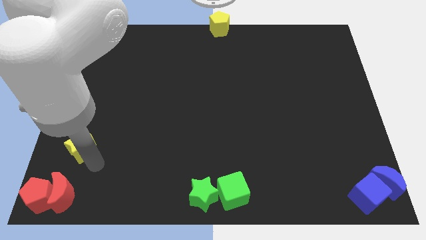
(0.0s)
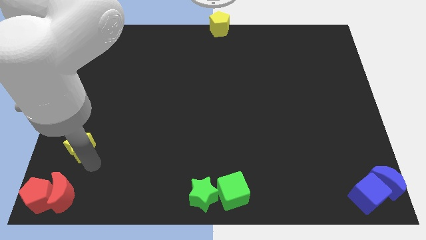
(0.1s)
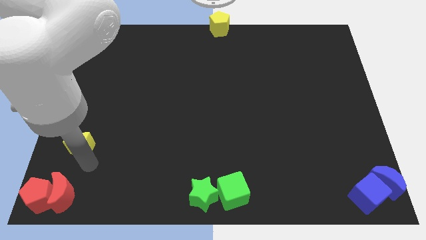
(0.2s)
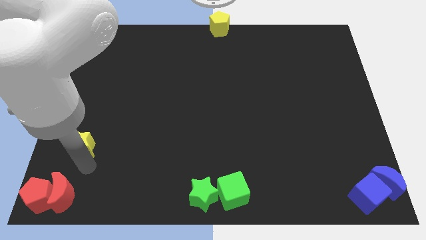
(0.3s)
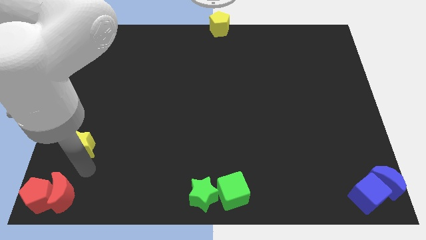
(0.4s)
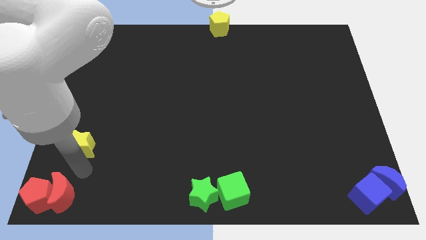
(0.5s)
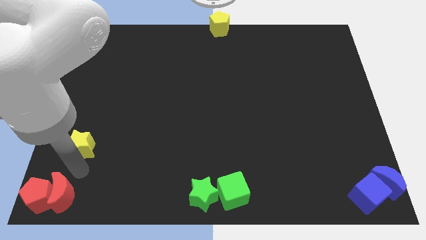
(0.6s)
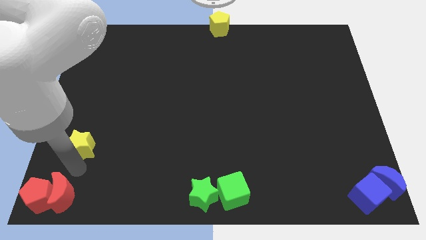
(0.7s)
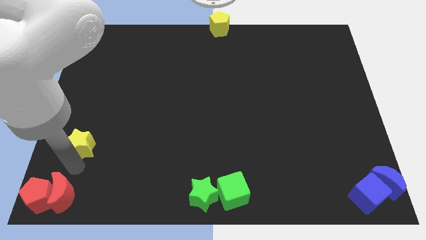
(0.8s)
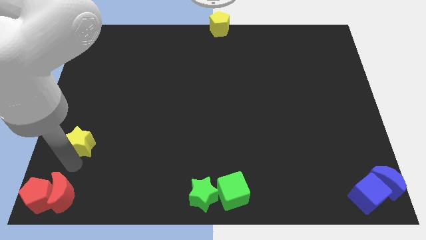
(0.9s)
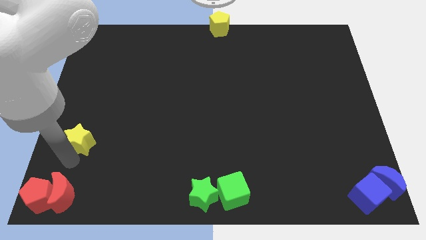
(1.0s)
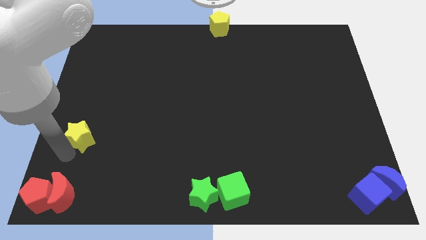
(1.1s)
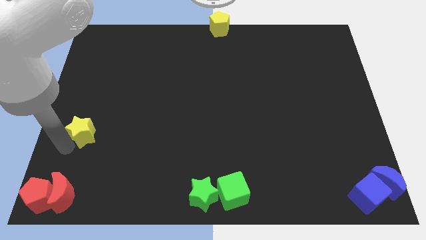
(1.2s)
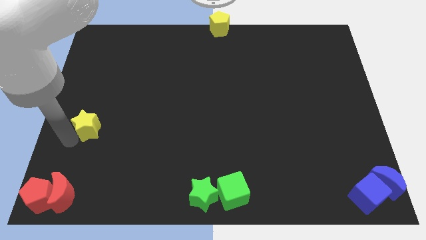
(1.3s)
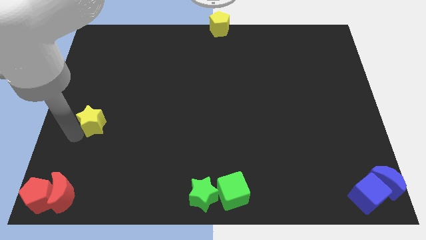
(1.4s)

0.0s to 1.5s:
slightly push the yellow star upwards of the board

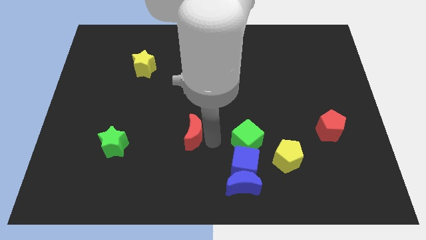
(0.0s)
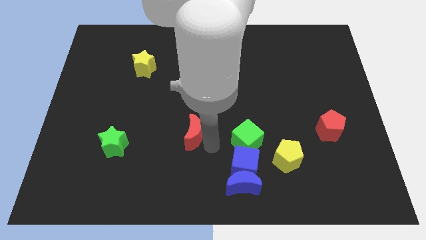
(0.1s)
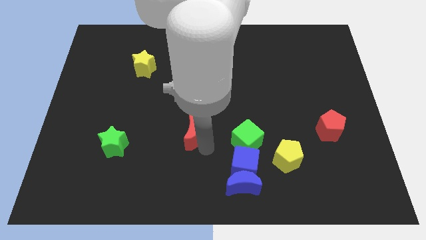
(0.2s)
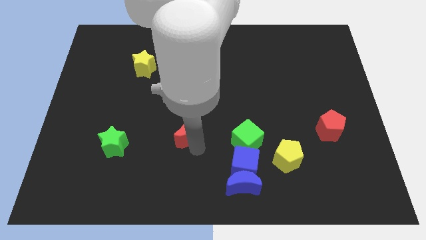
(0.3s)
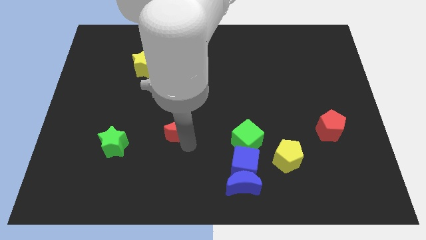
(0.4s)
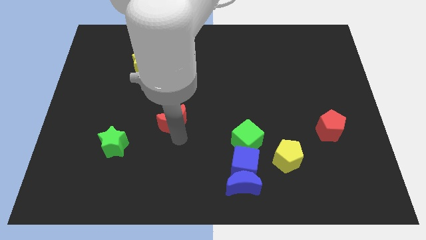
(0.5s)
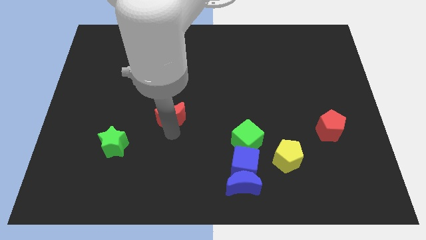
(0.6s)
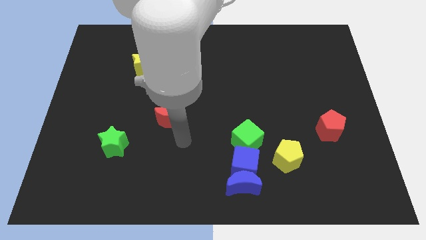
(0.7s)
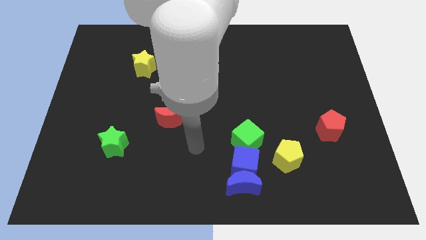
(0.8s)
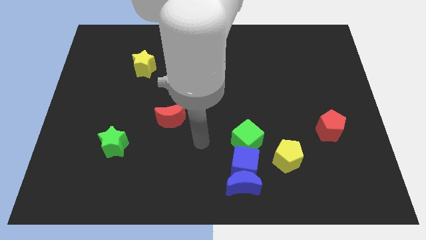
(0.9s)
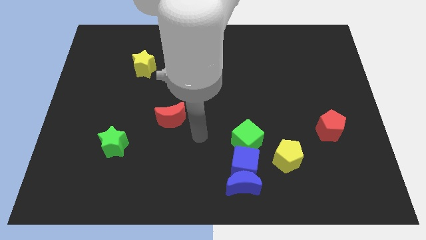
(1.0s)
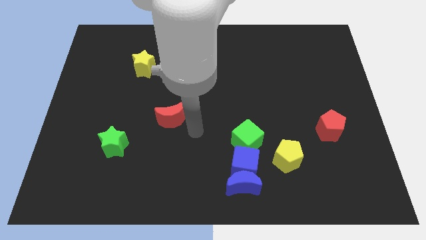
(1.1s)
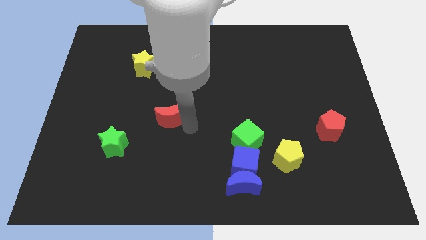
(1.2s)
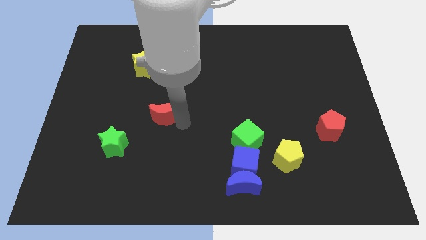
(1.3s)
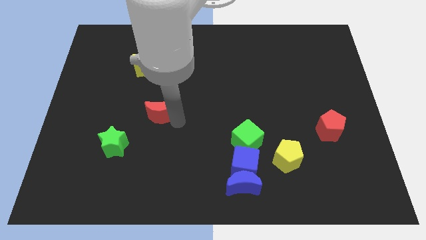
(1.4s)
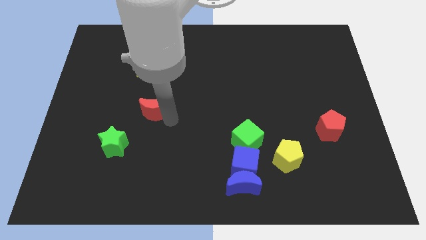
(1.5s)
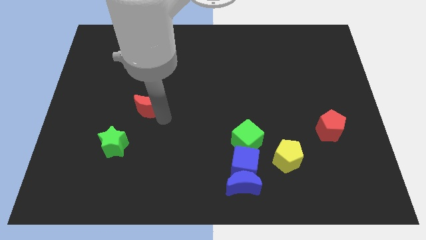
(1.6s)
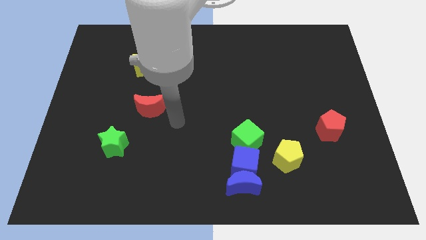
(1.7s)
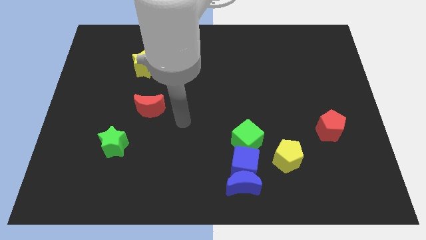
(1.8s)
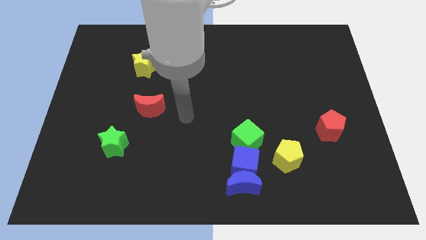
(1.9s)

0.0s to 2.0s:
put the red moon above the green star

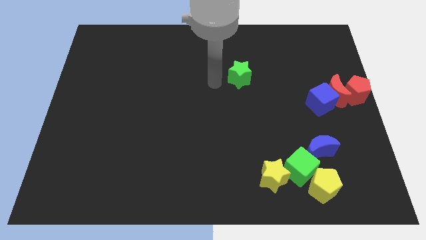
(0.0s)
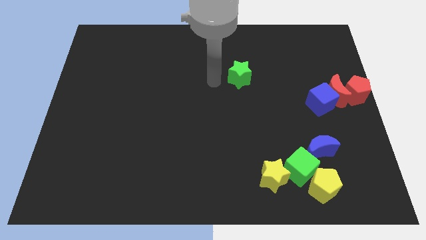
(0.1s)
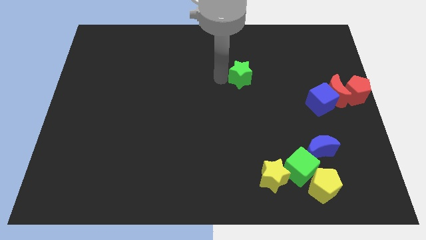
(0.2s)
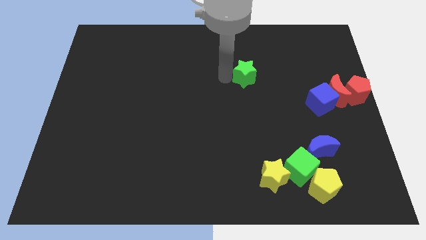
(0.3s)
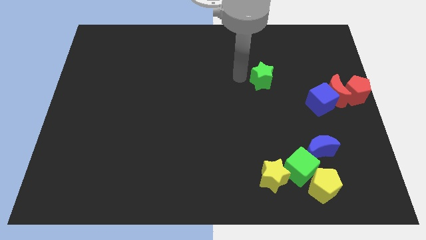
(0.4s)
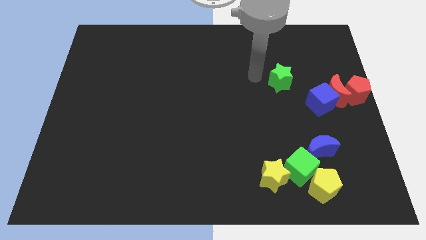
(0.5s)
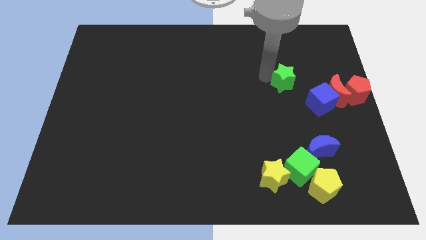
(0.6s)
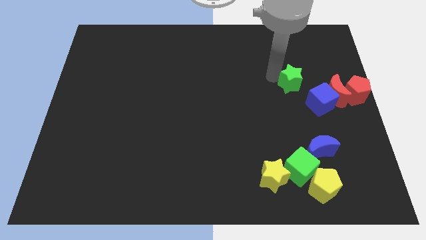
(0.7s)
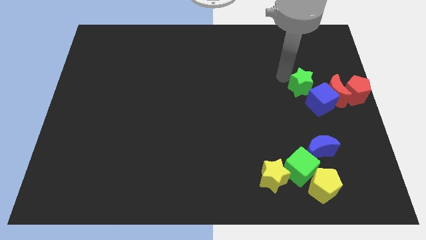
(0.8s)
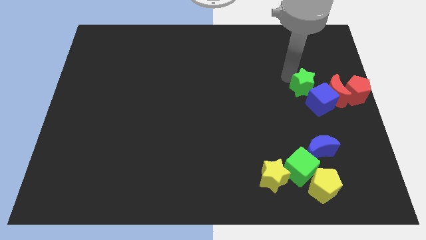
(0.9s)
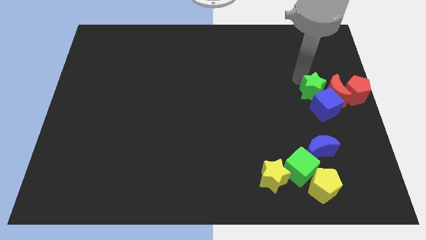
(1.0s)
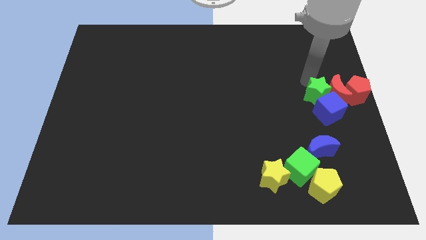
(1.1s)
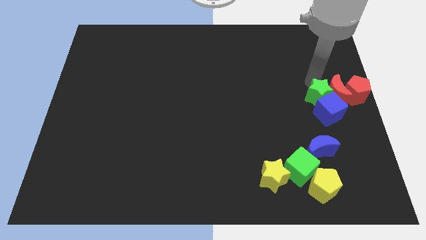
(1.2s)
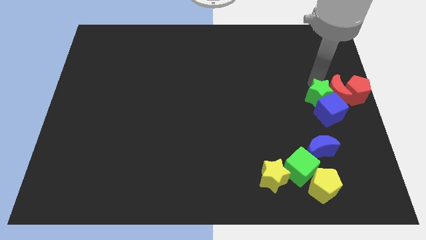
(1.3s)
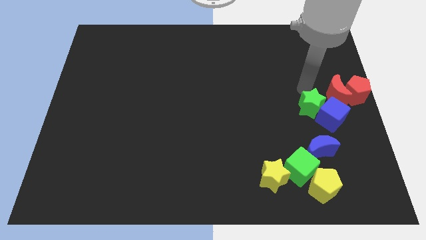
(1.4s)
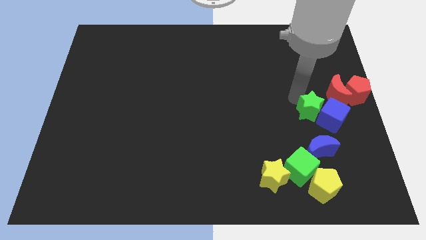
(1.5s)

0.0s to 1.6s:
move the green star into the blue cube

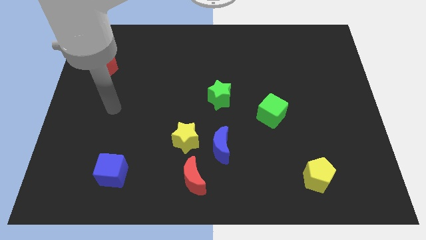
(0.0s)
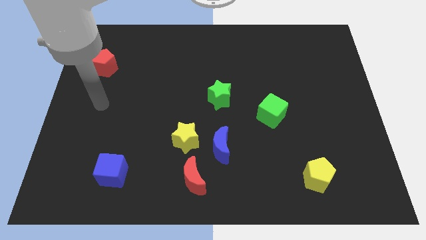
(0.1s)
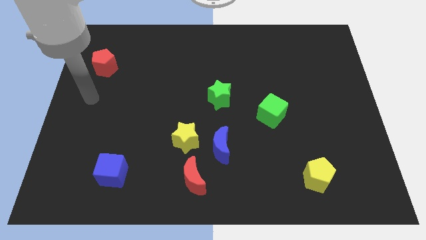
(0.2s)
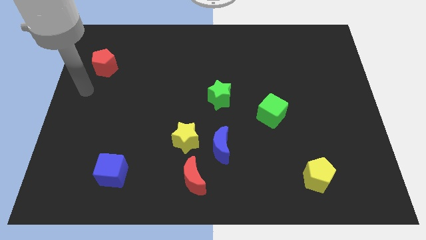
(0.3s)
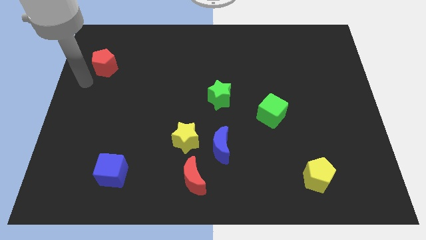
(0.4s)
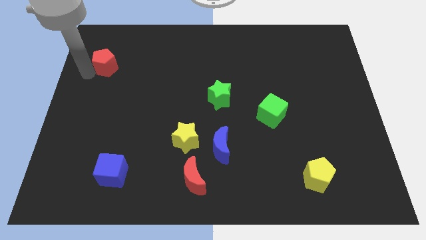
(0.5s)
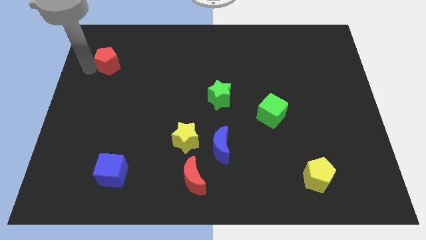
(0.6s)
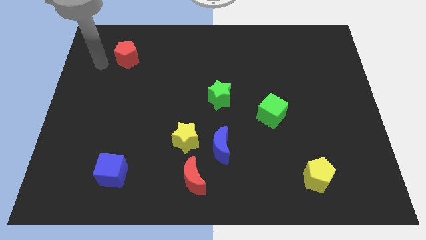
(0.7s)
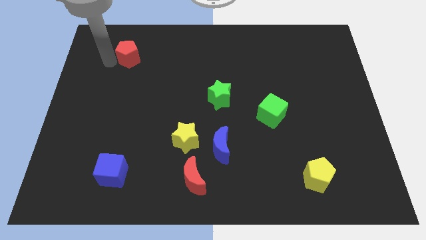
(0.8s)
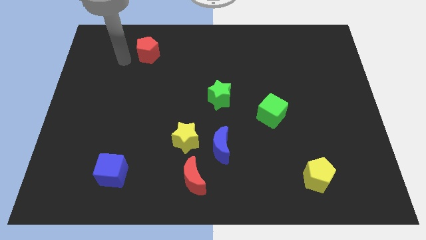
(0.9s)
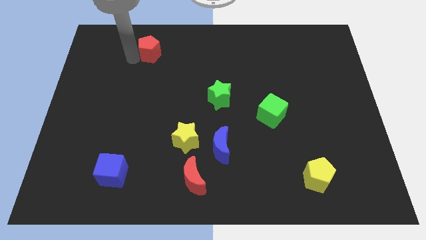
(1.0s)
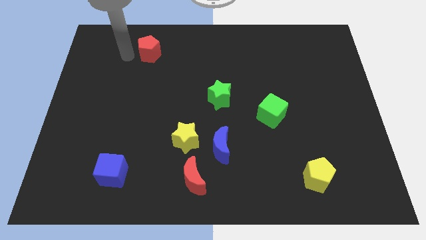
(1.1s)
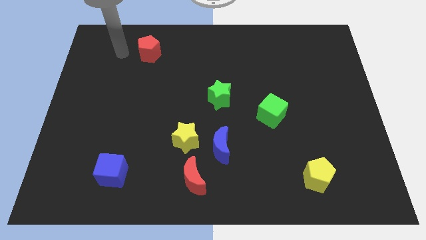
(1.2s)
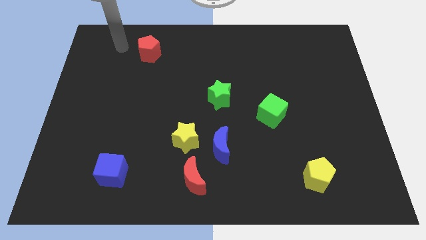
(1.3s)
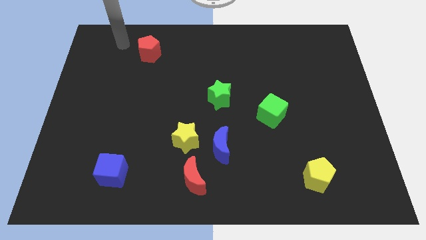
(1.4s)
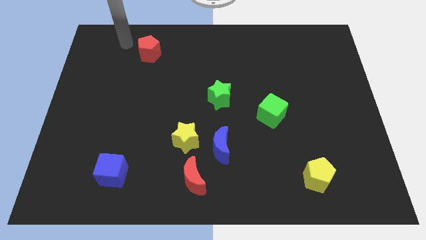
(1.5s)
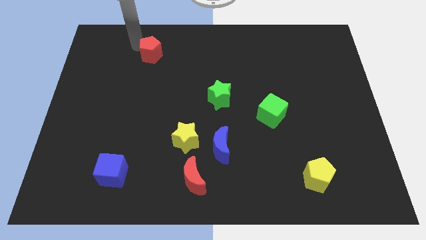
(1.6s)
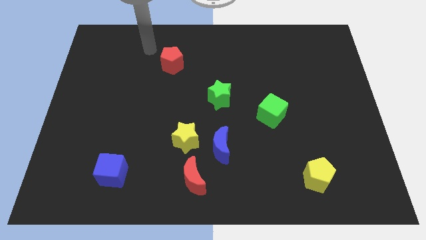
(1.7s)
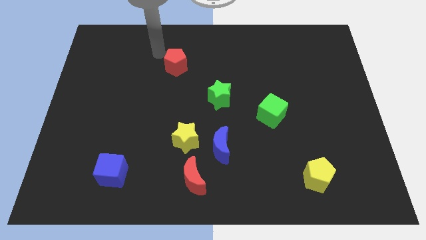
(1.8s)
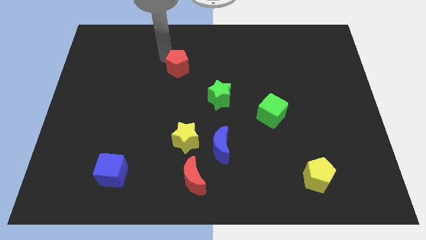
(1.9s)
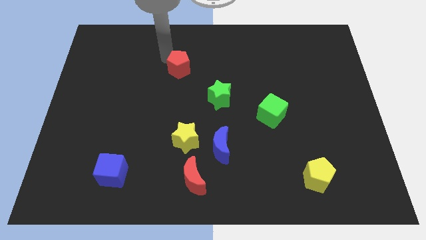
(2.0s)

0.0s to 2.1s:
push the red pentagon towards the top left of the green star

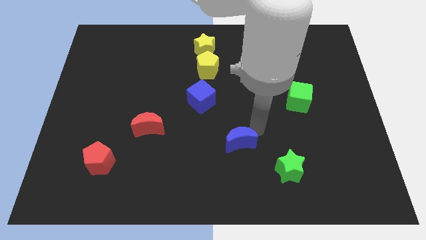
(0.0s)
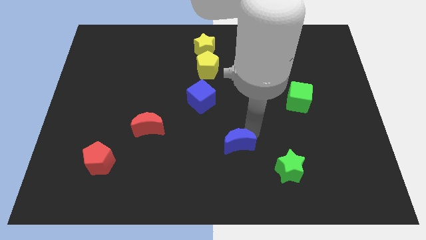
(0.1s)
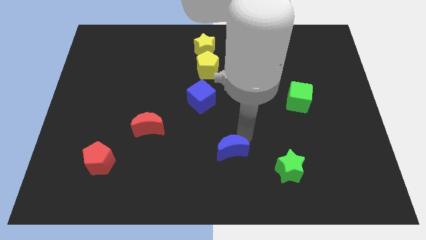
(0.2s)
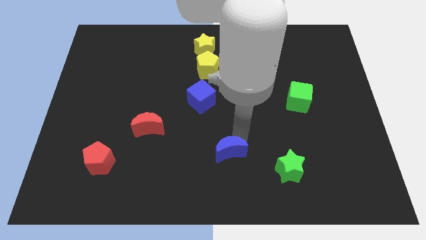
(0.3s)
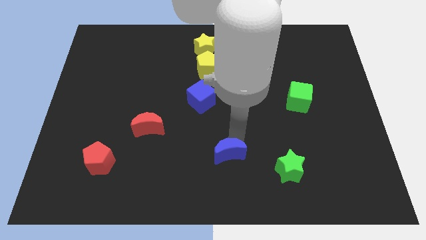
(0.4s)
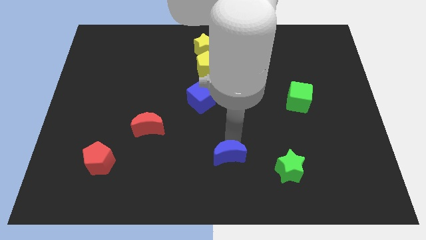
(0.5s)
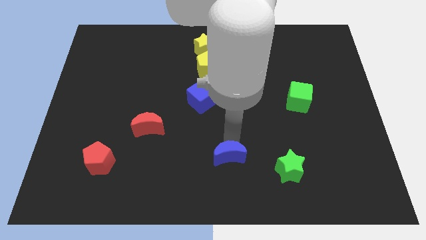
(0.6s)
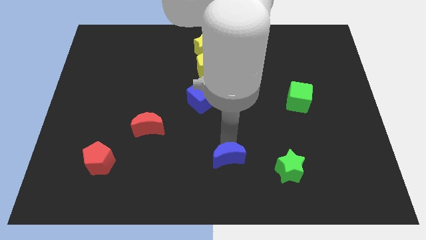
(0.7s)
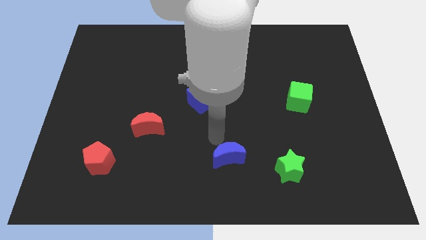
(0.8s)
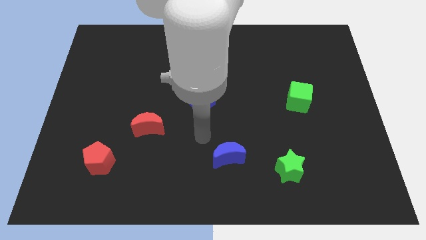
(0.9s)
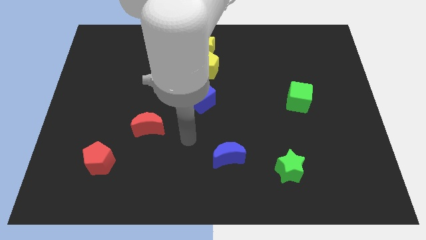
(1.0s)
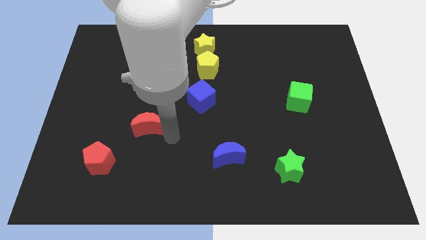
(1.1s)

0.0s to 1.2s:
slightly move the blue crescent left to the green star

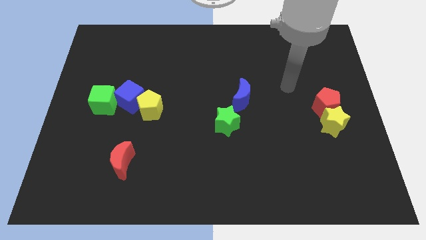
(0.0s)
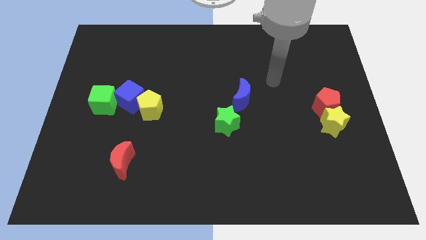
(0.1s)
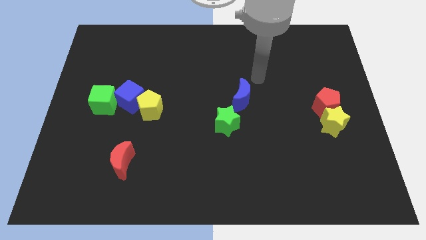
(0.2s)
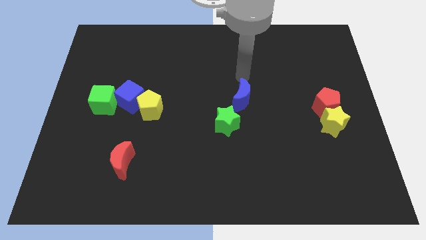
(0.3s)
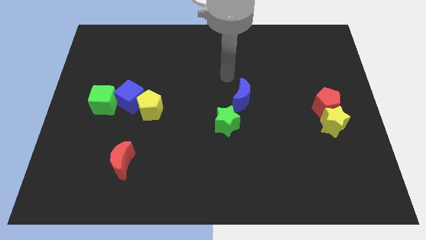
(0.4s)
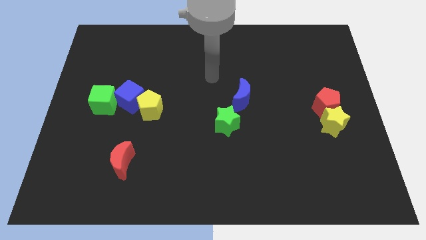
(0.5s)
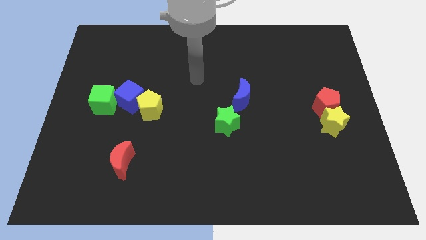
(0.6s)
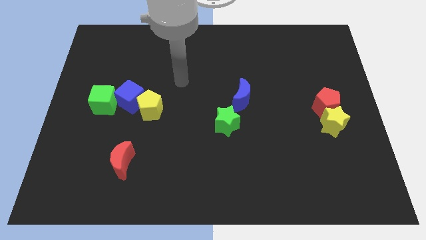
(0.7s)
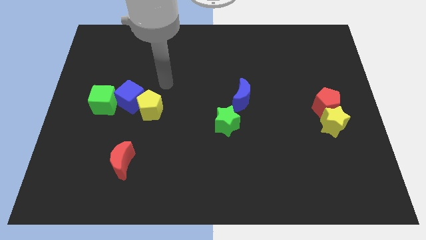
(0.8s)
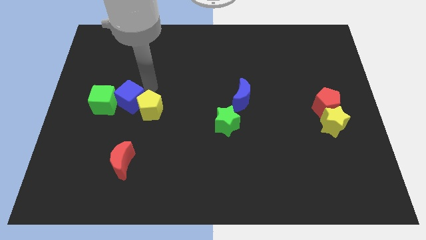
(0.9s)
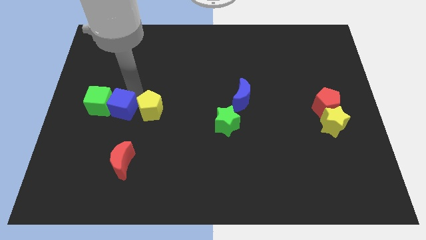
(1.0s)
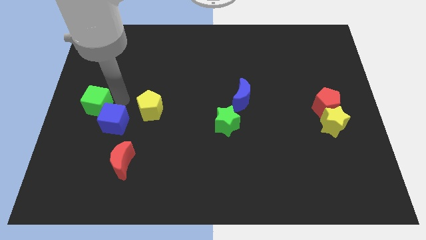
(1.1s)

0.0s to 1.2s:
place your arm above the blue cube
